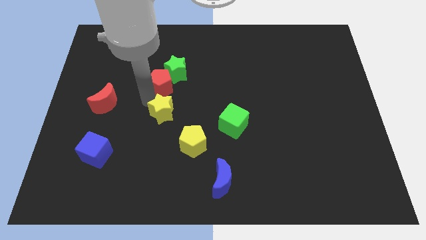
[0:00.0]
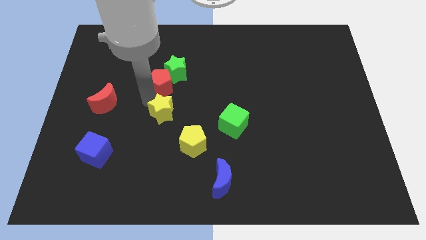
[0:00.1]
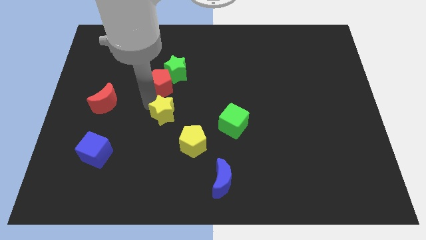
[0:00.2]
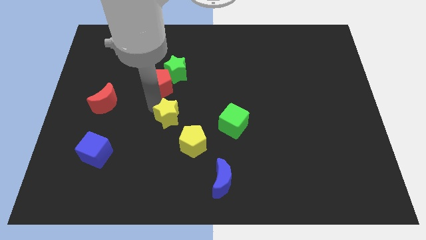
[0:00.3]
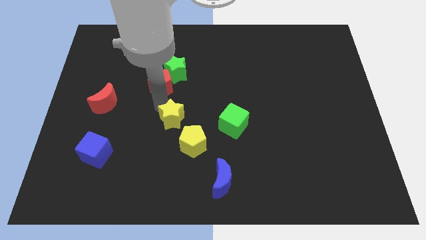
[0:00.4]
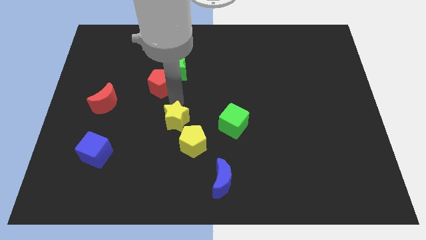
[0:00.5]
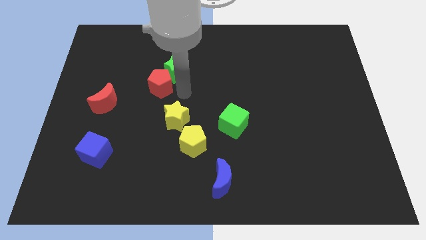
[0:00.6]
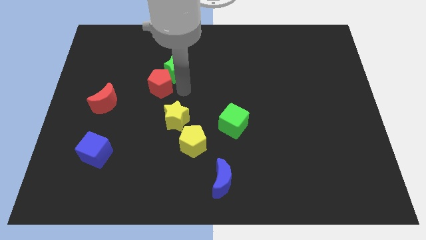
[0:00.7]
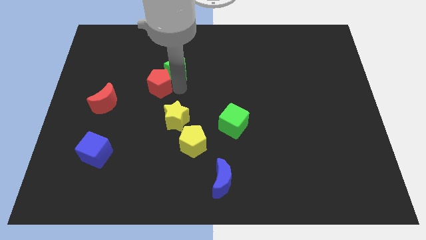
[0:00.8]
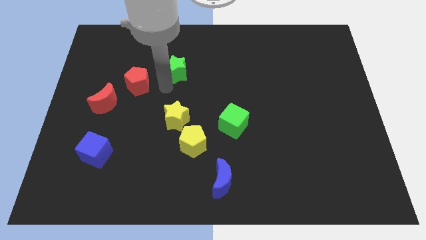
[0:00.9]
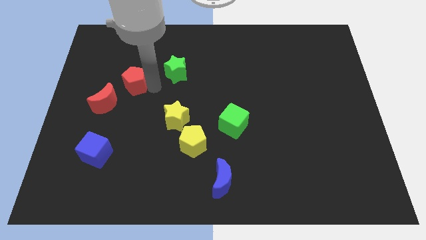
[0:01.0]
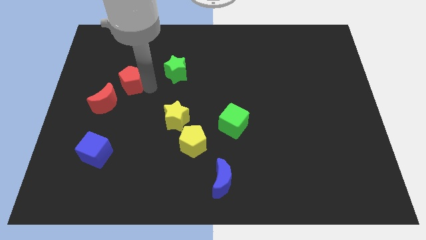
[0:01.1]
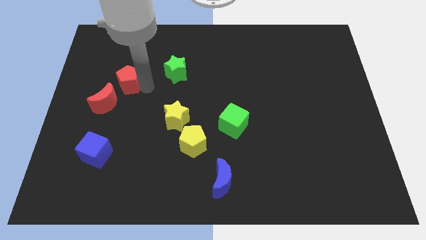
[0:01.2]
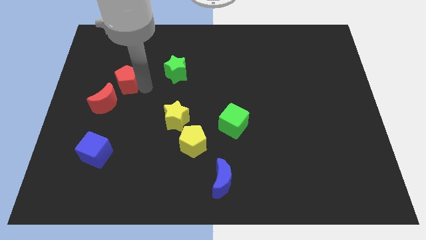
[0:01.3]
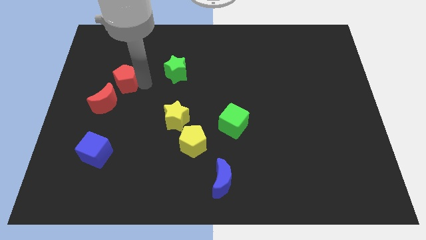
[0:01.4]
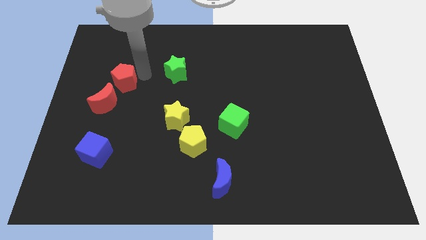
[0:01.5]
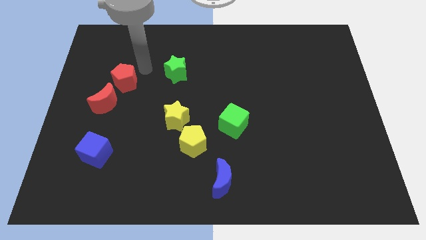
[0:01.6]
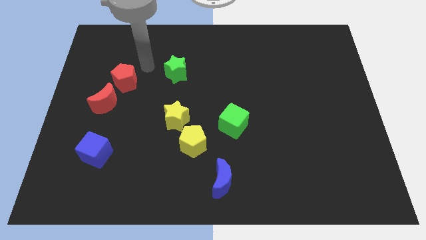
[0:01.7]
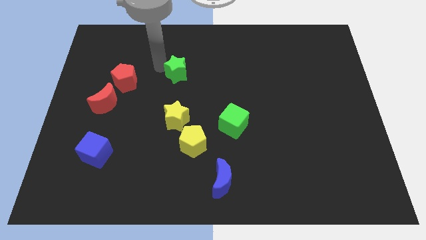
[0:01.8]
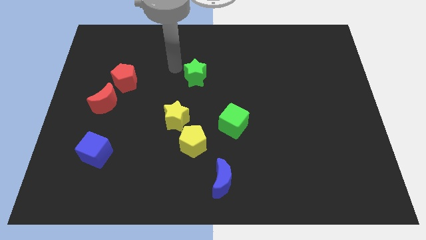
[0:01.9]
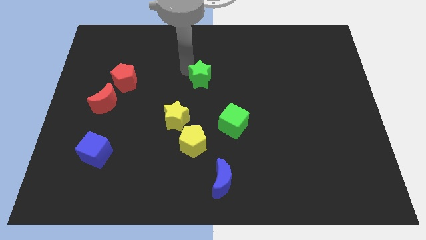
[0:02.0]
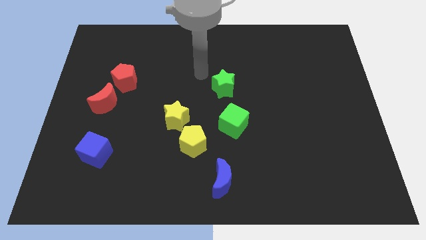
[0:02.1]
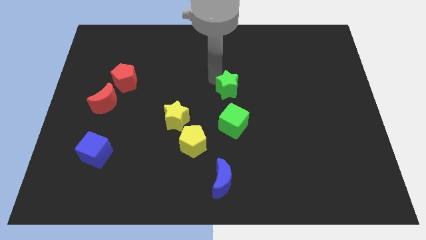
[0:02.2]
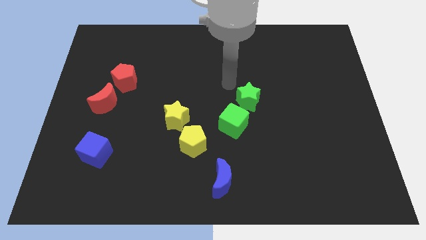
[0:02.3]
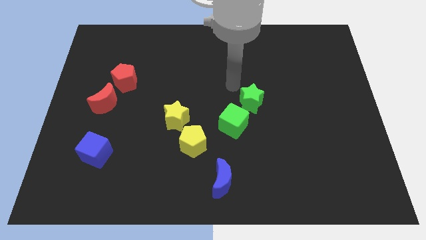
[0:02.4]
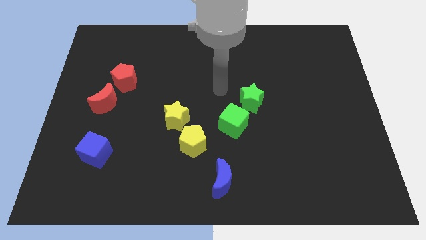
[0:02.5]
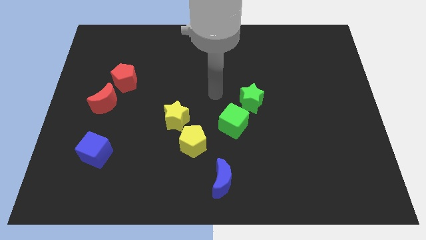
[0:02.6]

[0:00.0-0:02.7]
move the green star above the green cube

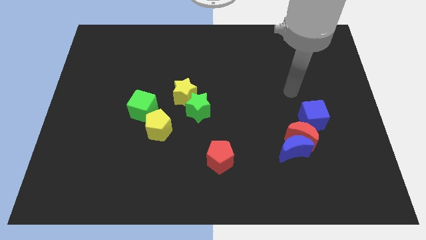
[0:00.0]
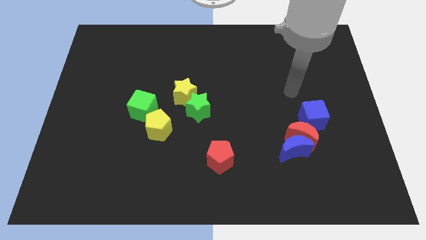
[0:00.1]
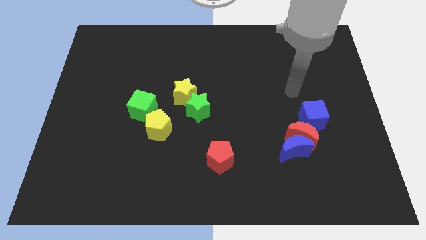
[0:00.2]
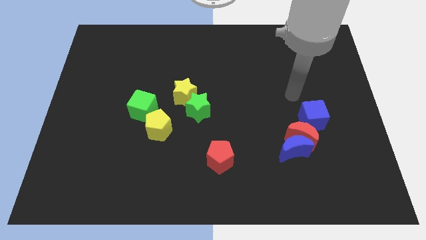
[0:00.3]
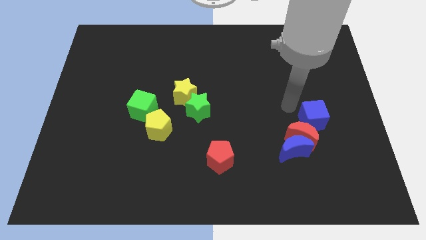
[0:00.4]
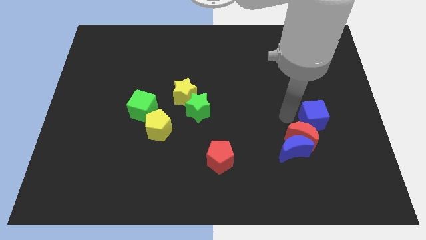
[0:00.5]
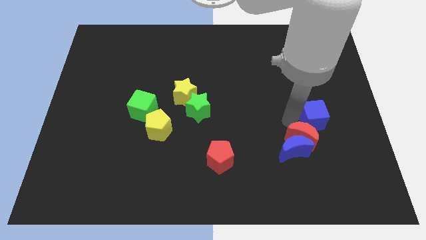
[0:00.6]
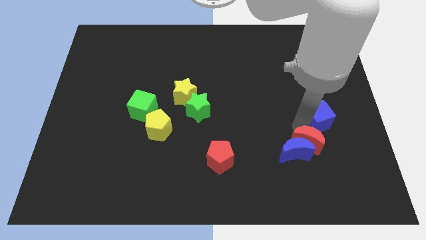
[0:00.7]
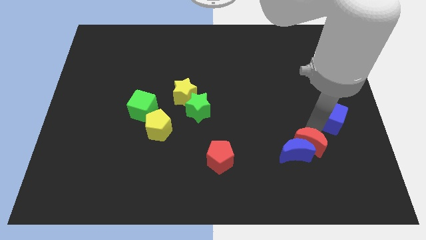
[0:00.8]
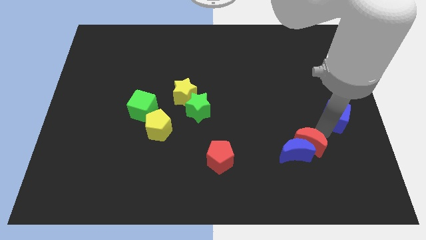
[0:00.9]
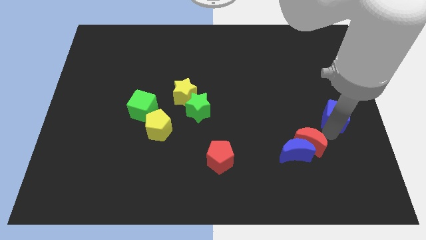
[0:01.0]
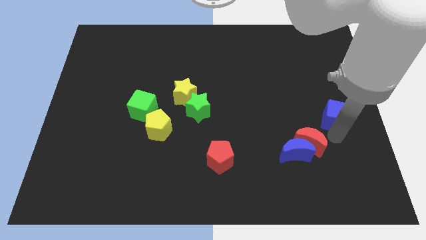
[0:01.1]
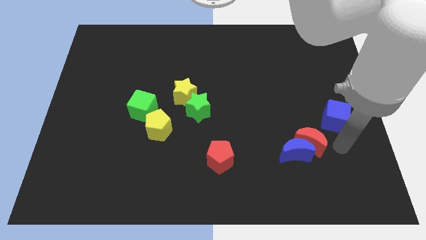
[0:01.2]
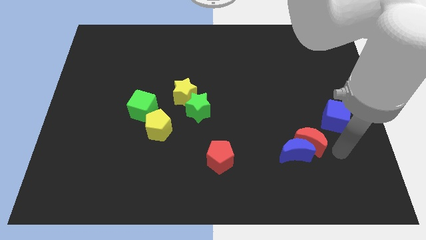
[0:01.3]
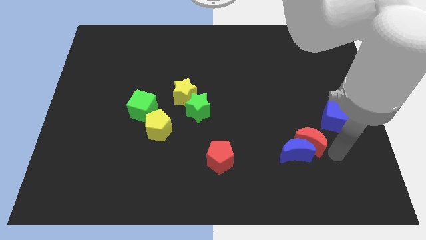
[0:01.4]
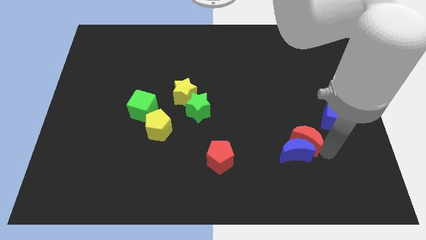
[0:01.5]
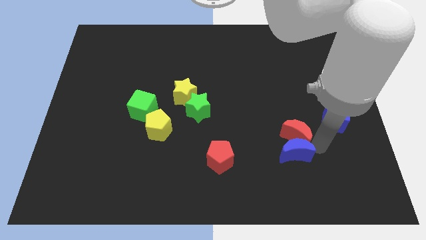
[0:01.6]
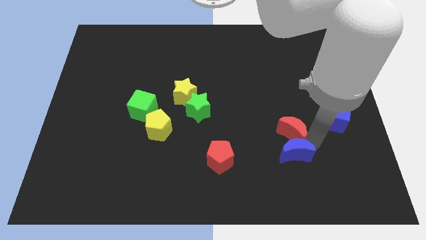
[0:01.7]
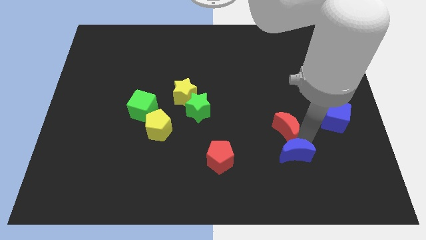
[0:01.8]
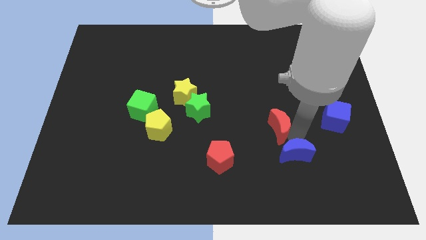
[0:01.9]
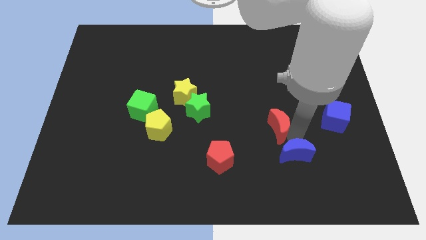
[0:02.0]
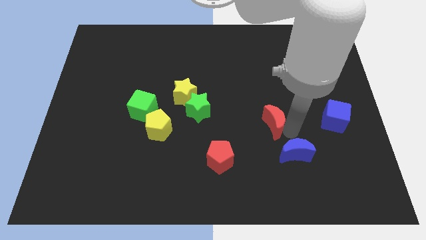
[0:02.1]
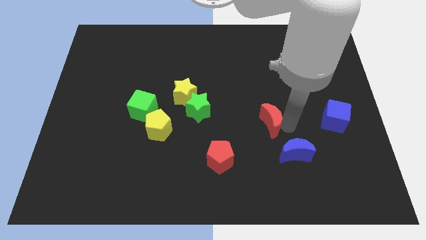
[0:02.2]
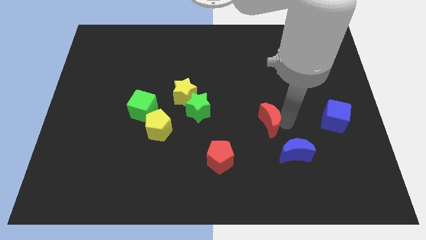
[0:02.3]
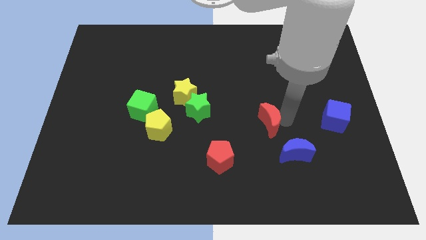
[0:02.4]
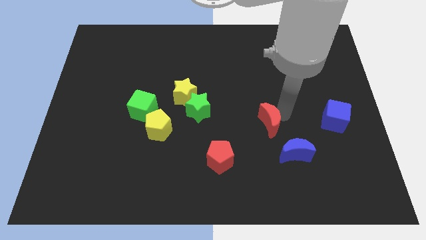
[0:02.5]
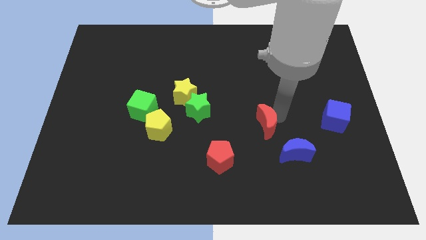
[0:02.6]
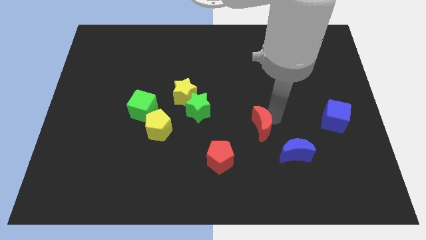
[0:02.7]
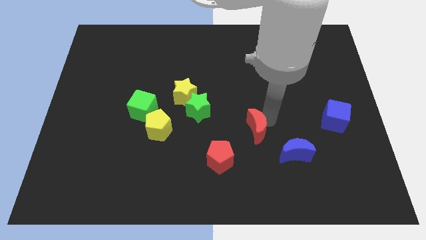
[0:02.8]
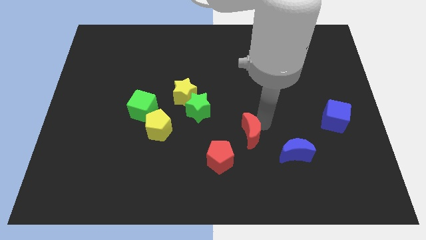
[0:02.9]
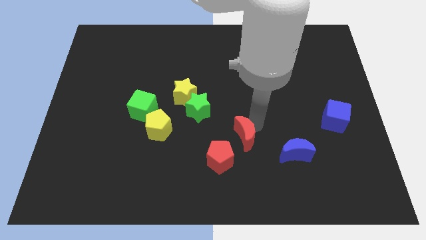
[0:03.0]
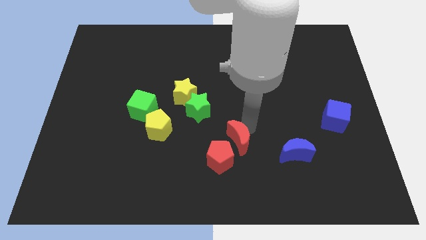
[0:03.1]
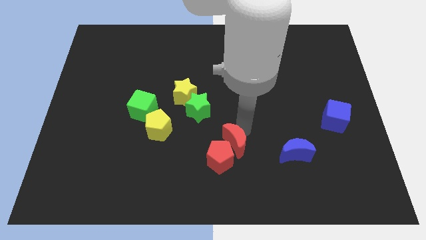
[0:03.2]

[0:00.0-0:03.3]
move the red moon to the top of the red pentagon

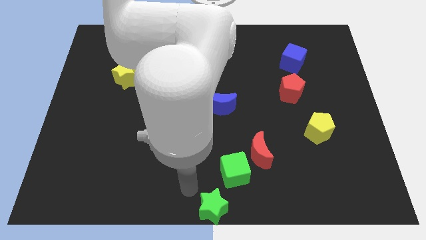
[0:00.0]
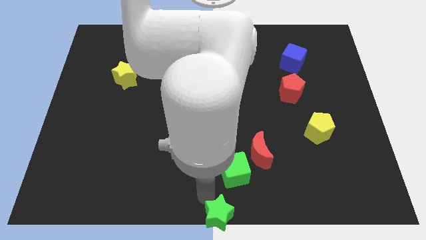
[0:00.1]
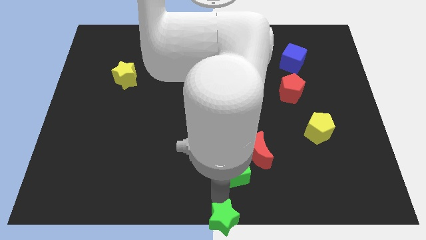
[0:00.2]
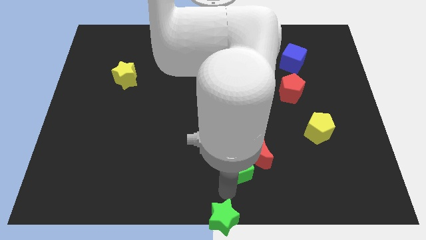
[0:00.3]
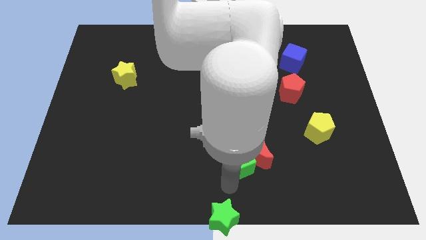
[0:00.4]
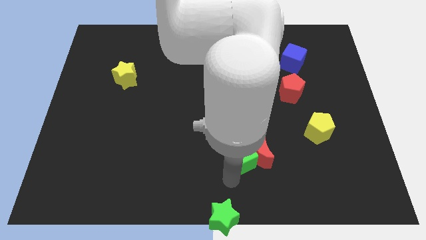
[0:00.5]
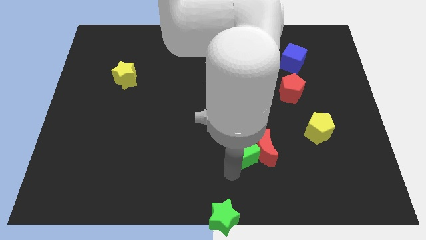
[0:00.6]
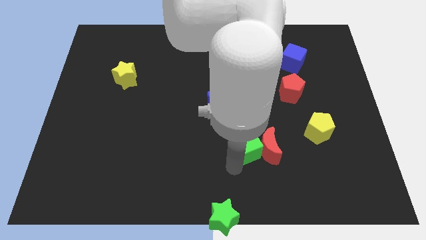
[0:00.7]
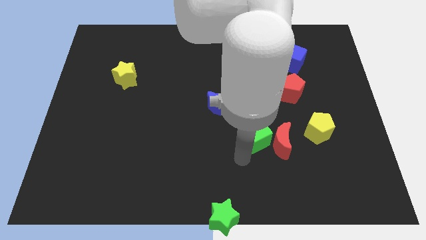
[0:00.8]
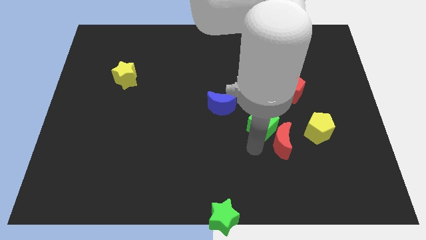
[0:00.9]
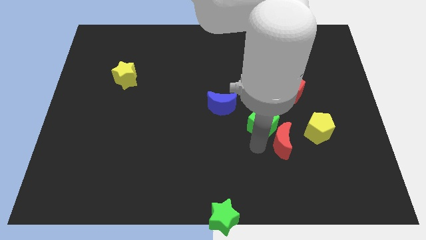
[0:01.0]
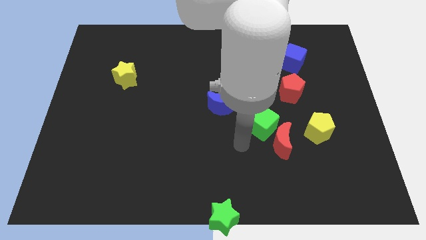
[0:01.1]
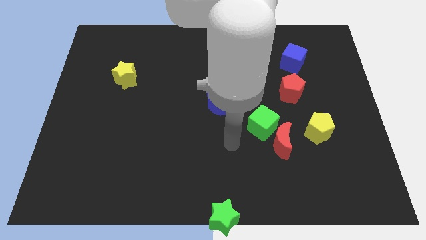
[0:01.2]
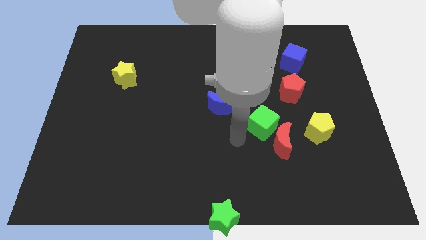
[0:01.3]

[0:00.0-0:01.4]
push the green blocks in different blocks

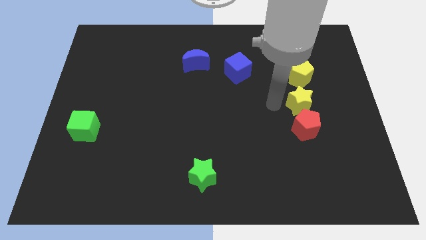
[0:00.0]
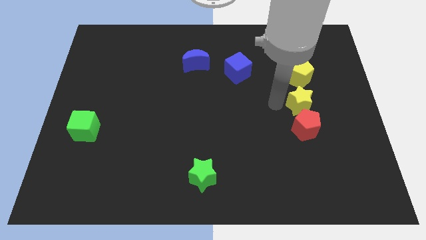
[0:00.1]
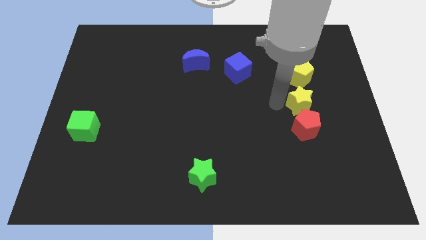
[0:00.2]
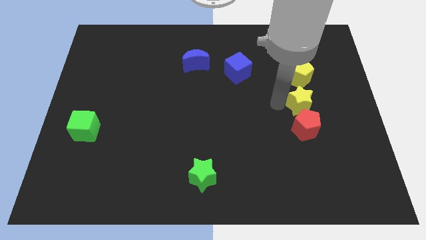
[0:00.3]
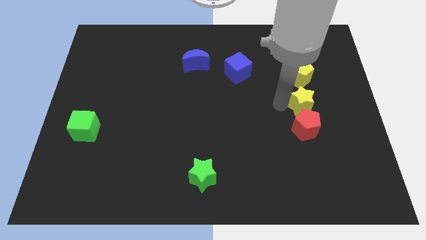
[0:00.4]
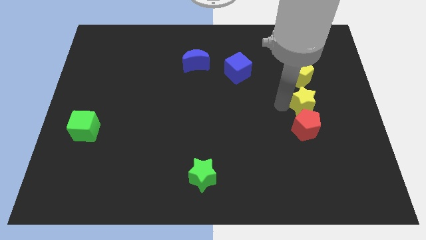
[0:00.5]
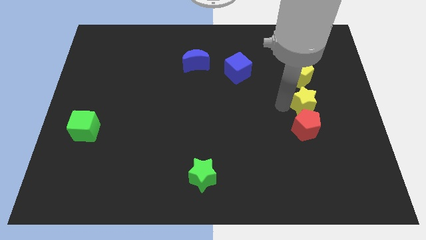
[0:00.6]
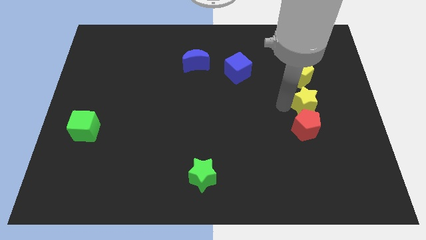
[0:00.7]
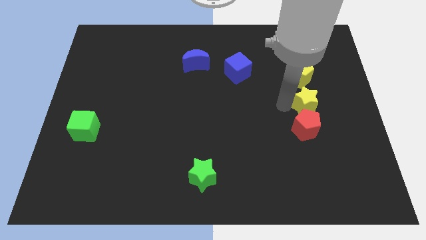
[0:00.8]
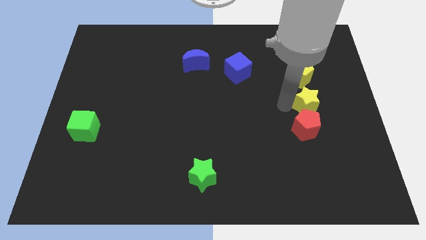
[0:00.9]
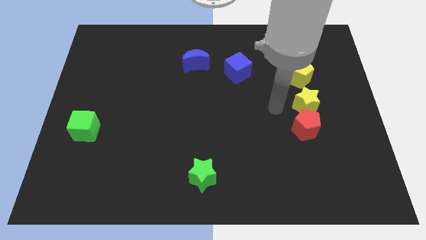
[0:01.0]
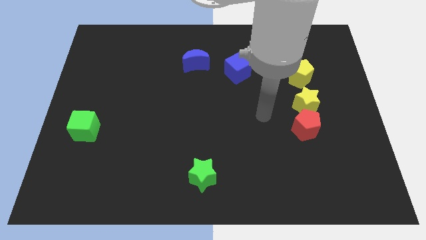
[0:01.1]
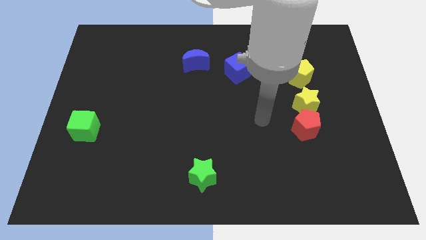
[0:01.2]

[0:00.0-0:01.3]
slightly touch the yellow star

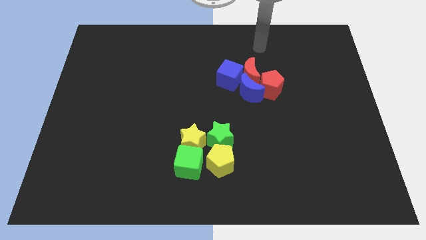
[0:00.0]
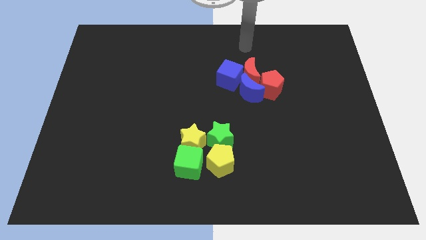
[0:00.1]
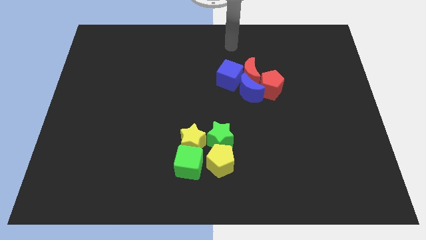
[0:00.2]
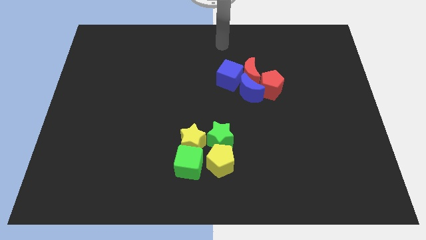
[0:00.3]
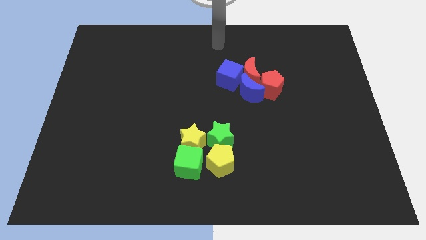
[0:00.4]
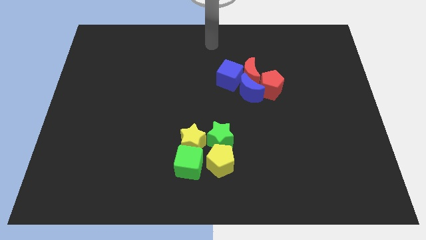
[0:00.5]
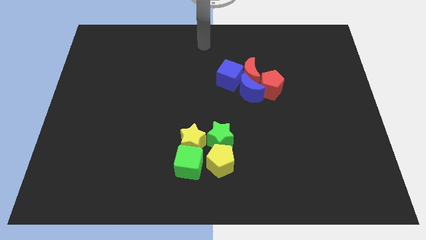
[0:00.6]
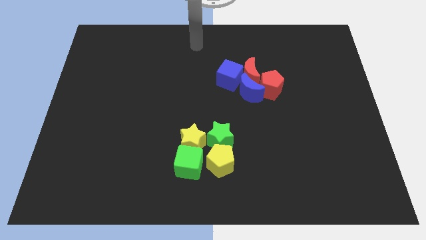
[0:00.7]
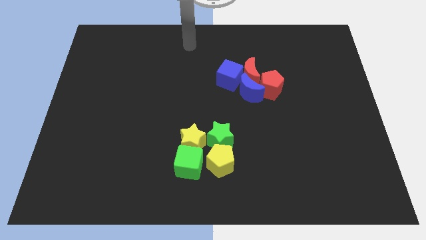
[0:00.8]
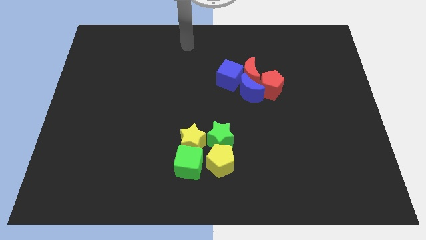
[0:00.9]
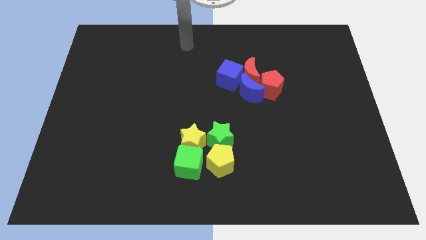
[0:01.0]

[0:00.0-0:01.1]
move the arm slightly on the left top of the board
